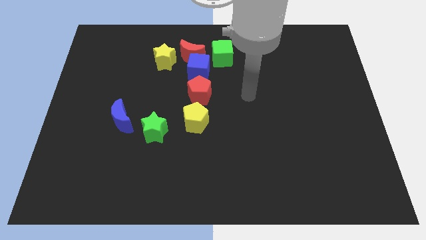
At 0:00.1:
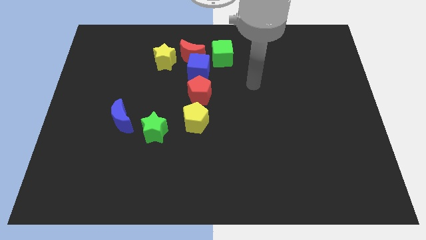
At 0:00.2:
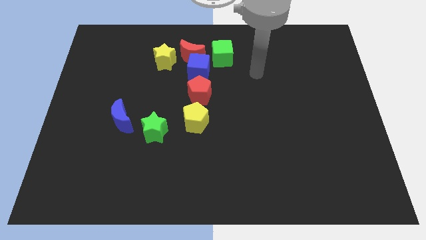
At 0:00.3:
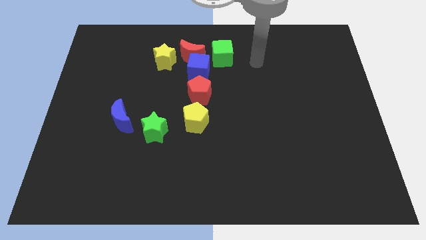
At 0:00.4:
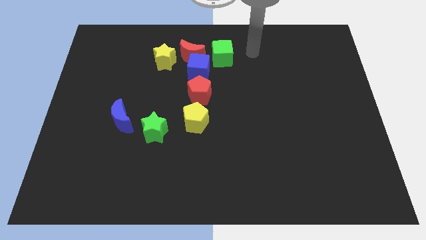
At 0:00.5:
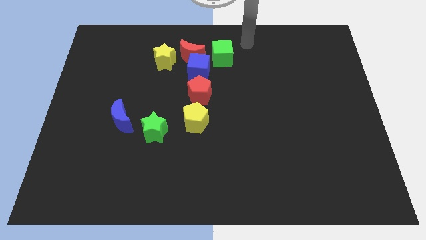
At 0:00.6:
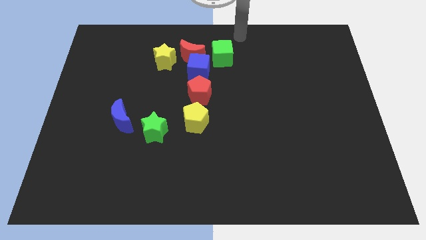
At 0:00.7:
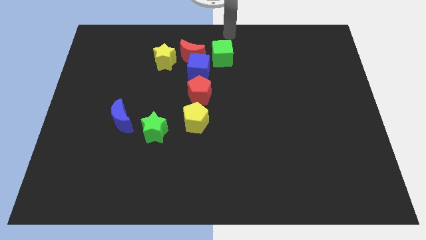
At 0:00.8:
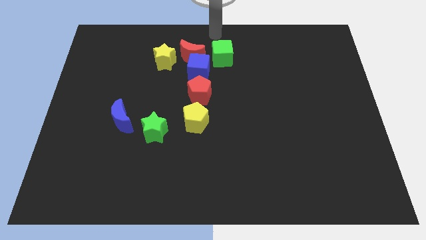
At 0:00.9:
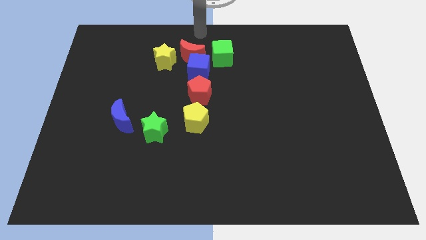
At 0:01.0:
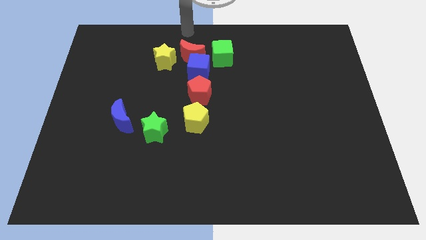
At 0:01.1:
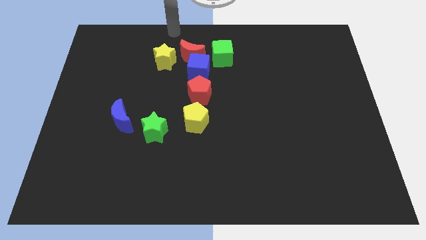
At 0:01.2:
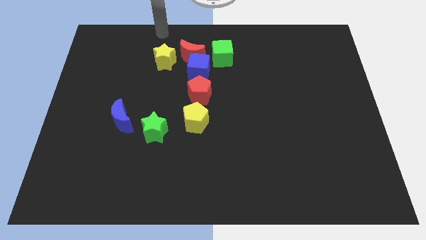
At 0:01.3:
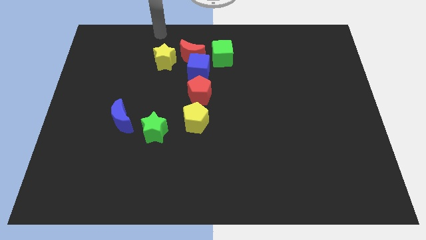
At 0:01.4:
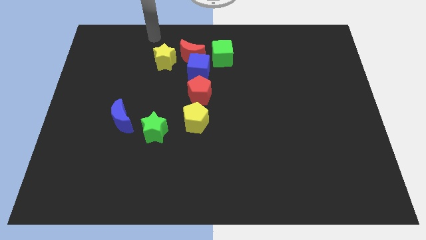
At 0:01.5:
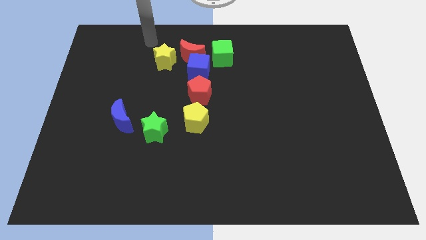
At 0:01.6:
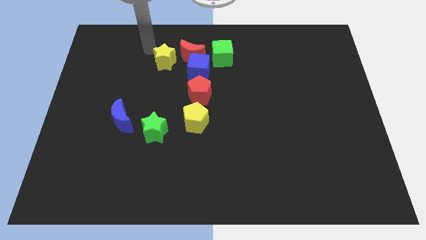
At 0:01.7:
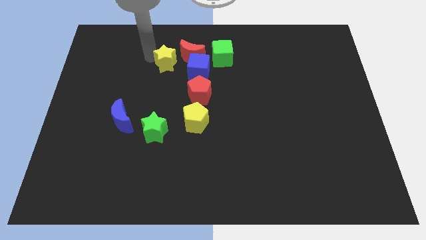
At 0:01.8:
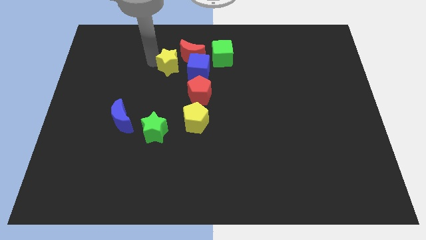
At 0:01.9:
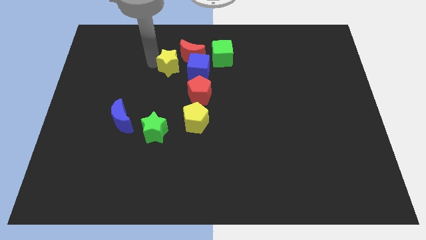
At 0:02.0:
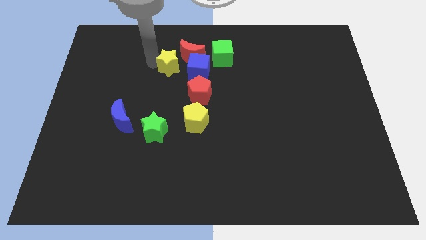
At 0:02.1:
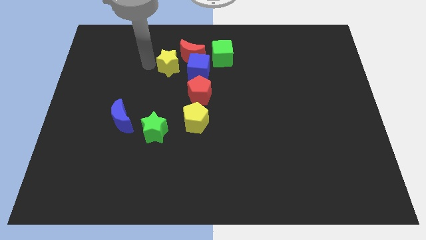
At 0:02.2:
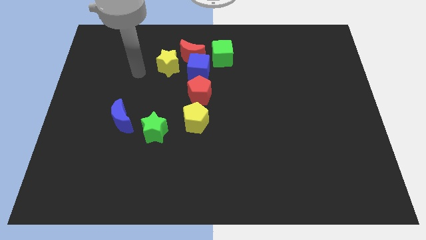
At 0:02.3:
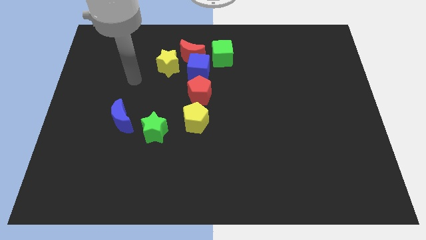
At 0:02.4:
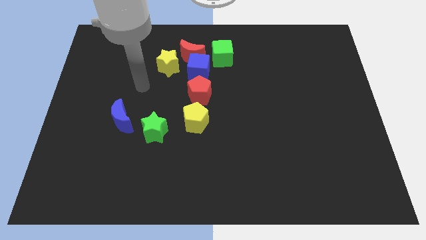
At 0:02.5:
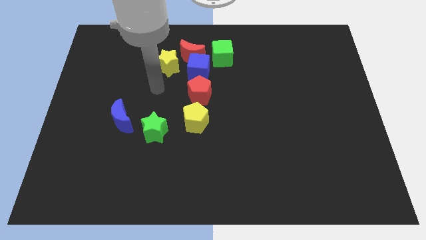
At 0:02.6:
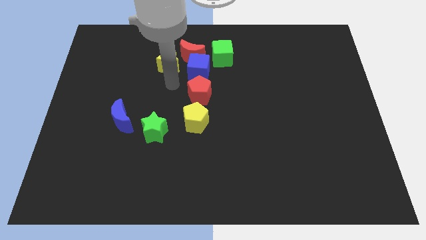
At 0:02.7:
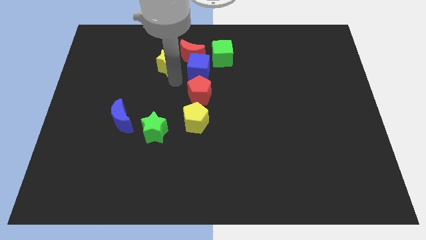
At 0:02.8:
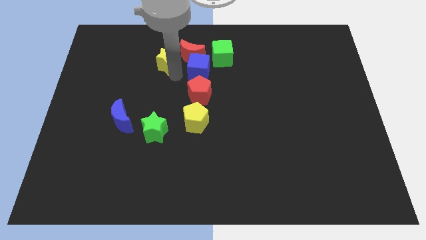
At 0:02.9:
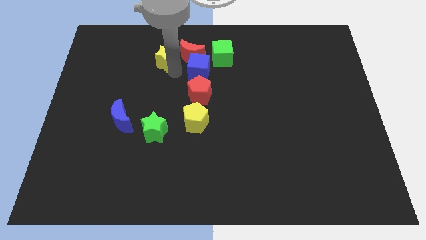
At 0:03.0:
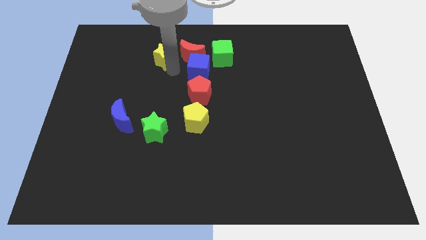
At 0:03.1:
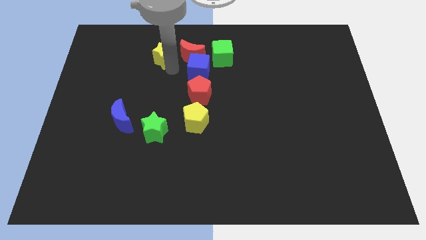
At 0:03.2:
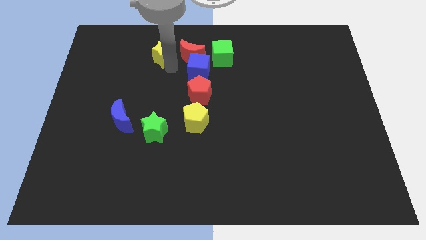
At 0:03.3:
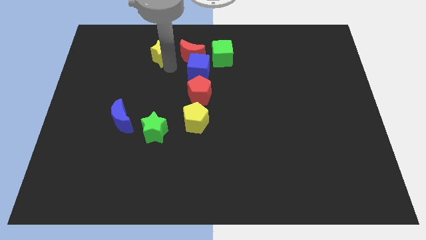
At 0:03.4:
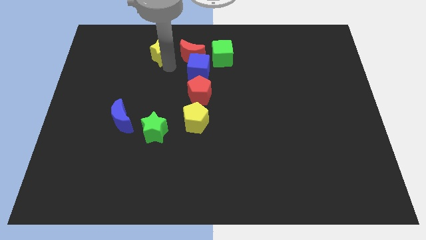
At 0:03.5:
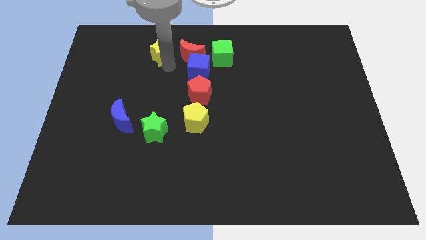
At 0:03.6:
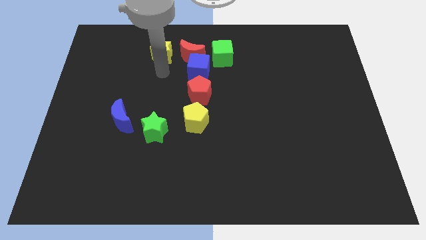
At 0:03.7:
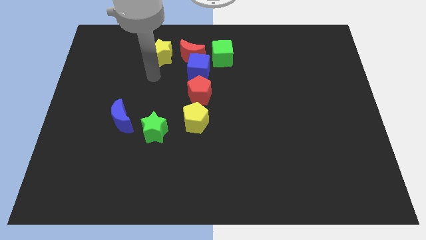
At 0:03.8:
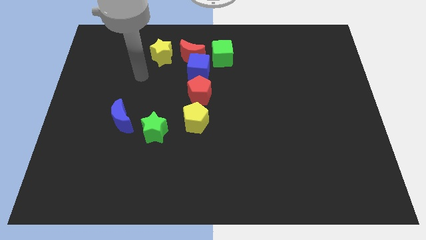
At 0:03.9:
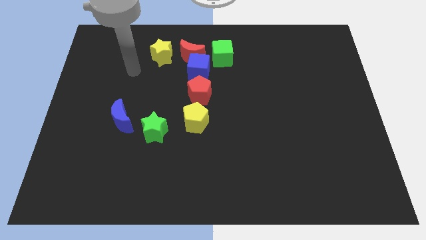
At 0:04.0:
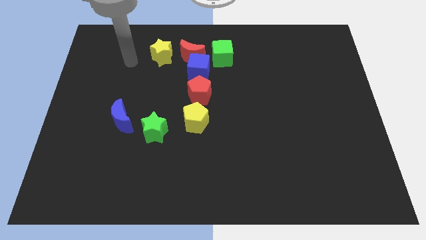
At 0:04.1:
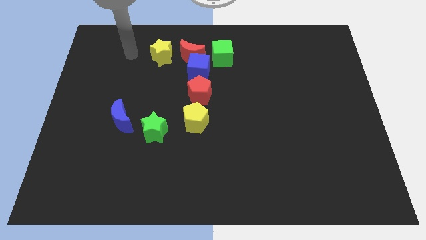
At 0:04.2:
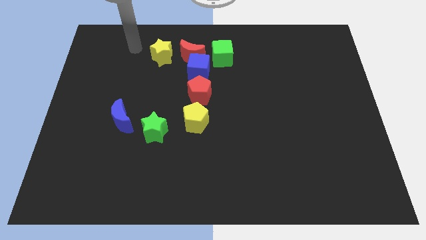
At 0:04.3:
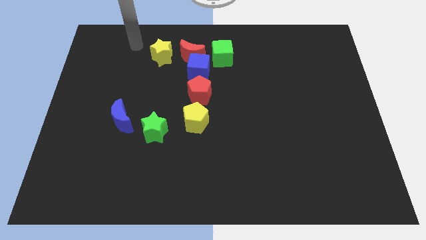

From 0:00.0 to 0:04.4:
slide the yellow star to the left side of the red moon

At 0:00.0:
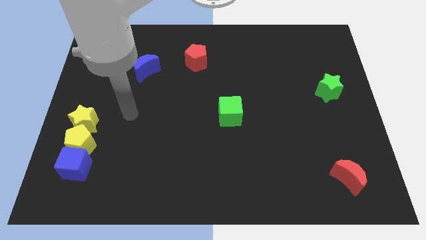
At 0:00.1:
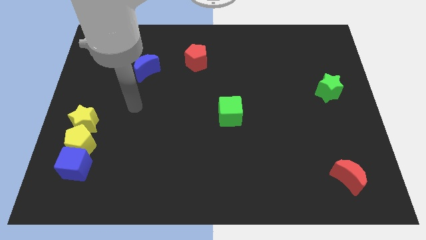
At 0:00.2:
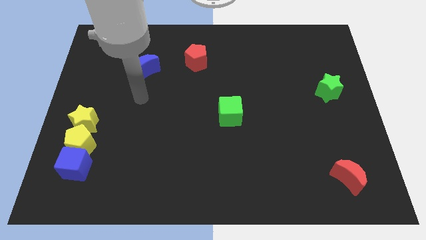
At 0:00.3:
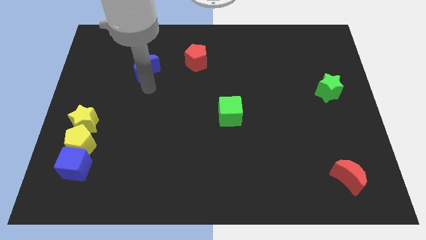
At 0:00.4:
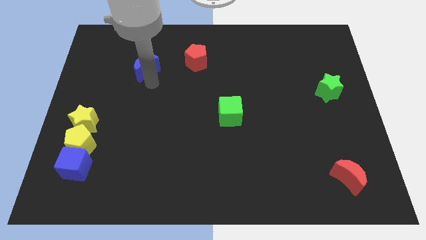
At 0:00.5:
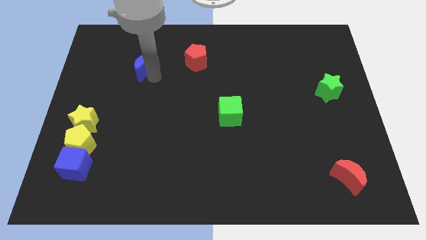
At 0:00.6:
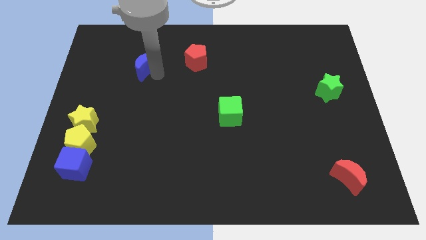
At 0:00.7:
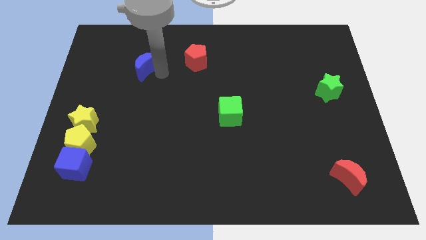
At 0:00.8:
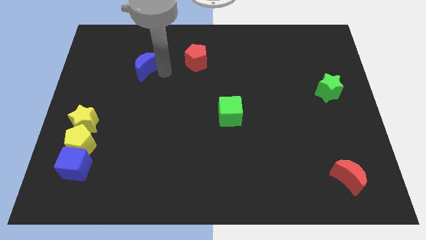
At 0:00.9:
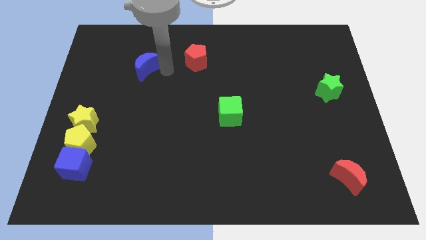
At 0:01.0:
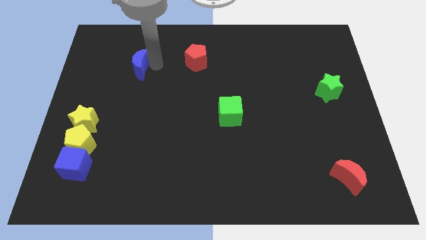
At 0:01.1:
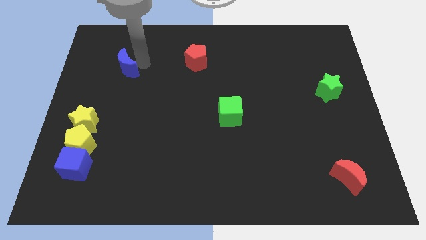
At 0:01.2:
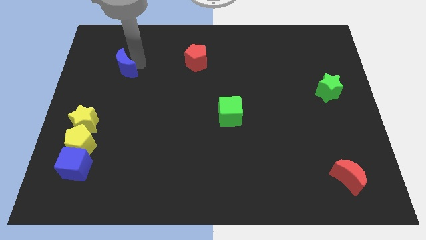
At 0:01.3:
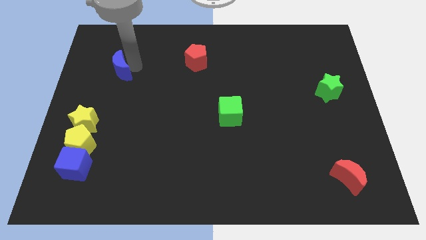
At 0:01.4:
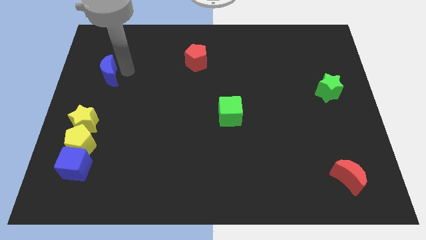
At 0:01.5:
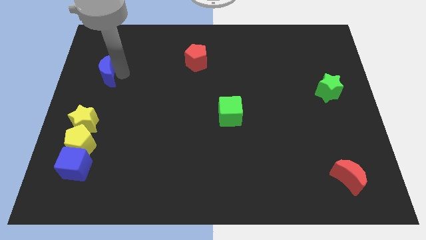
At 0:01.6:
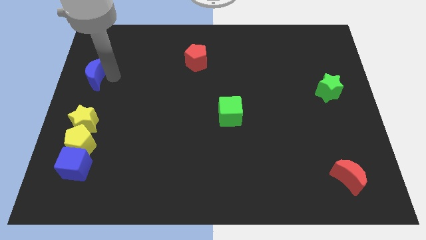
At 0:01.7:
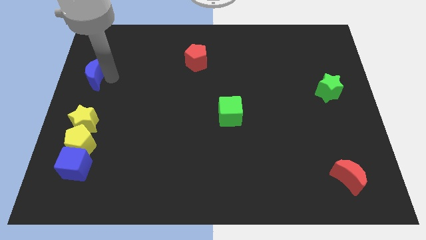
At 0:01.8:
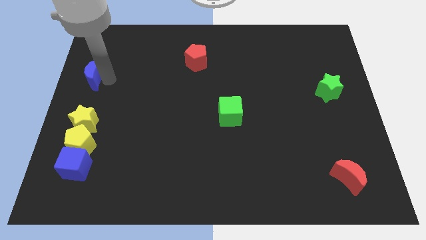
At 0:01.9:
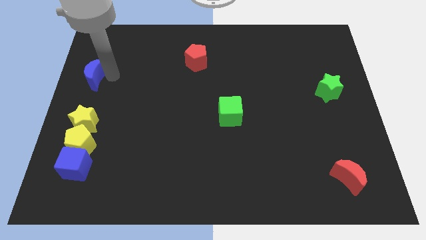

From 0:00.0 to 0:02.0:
push the blue moon on top of yellow star

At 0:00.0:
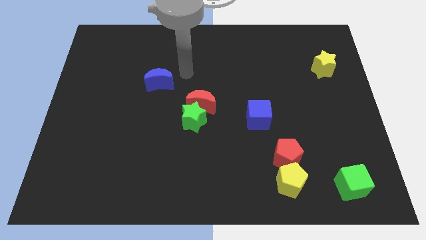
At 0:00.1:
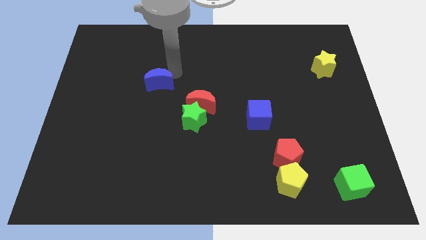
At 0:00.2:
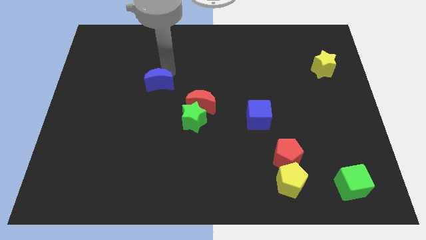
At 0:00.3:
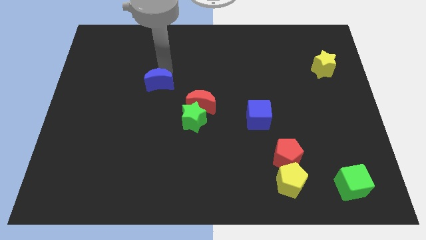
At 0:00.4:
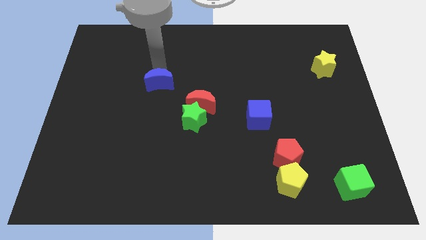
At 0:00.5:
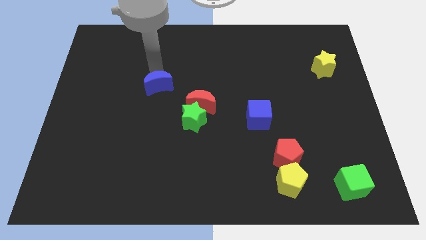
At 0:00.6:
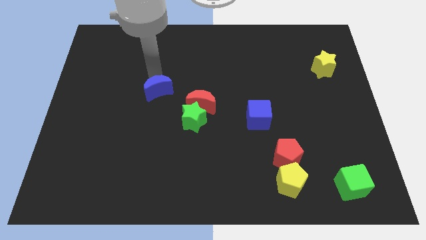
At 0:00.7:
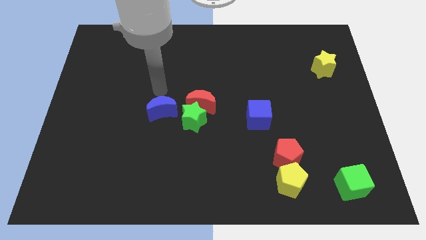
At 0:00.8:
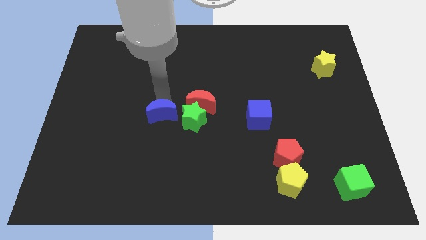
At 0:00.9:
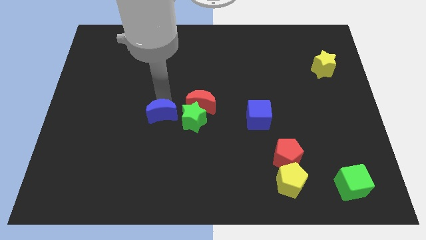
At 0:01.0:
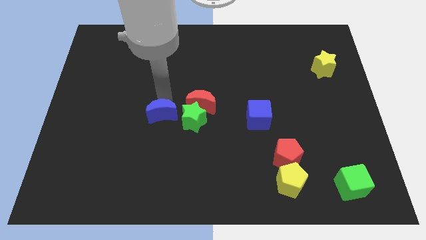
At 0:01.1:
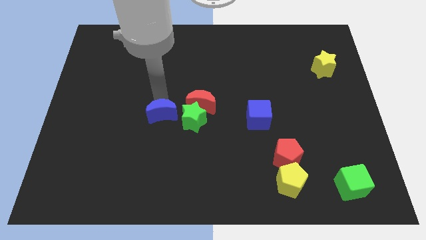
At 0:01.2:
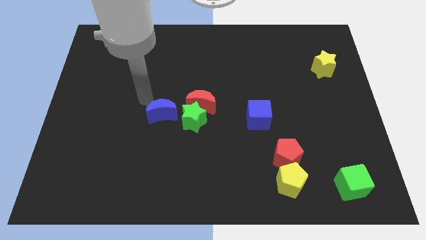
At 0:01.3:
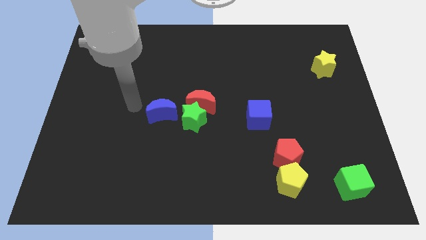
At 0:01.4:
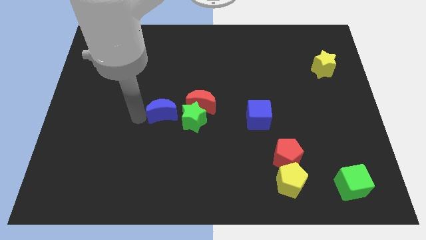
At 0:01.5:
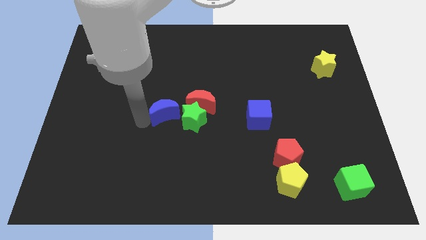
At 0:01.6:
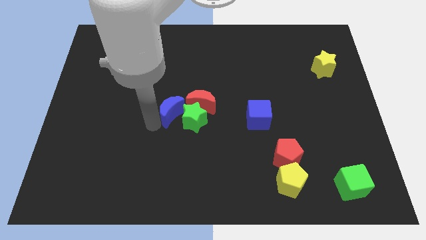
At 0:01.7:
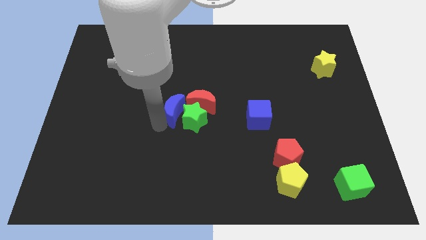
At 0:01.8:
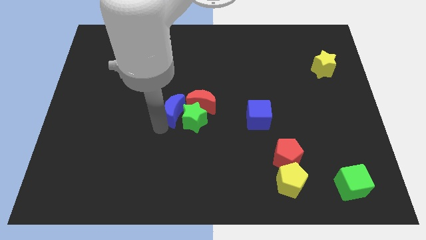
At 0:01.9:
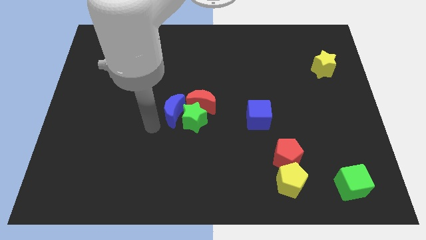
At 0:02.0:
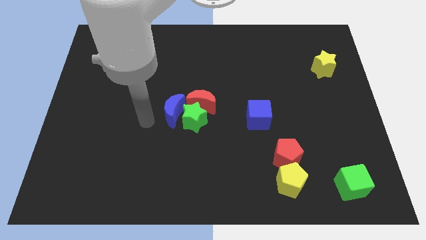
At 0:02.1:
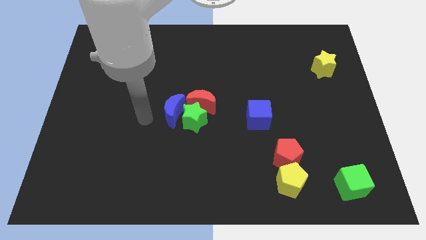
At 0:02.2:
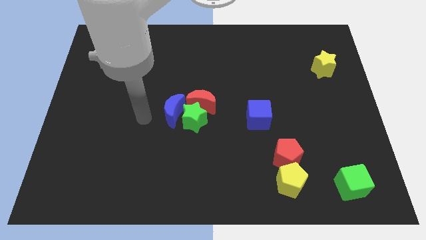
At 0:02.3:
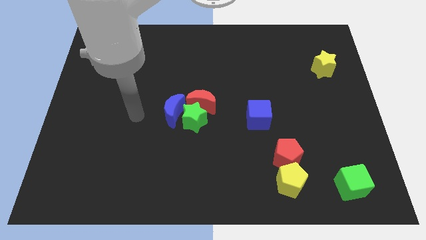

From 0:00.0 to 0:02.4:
place the blue moon to the left of green star at the center

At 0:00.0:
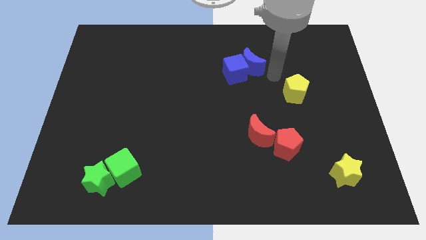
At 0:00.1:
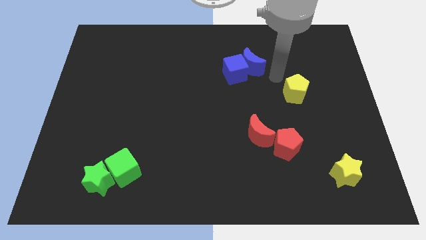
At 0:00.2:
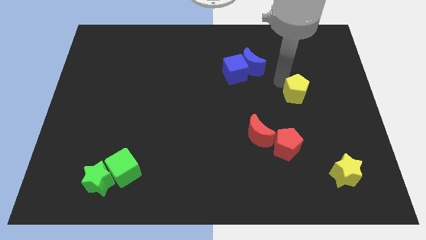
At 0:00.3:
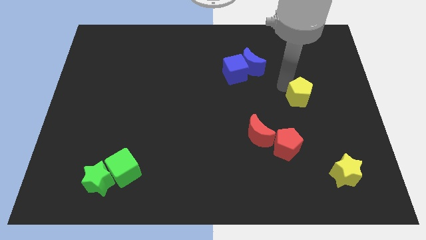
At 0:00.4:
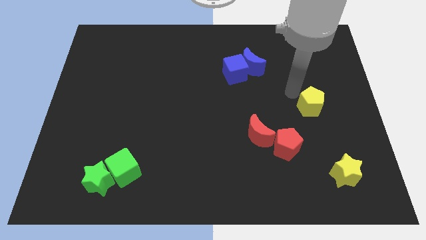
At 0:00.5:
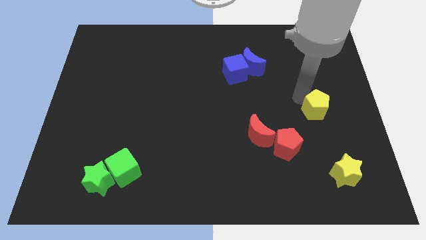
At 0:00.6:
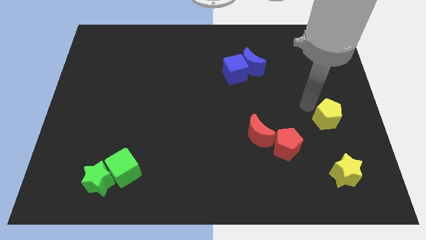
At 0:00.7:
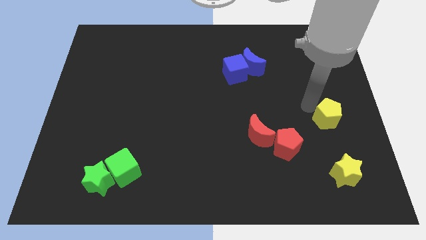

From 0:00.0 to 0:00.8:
move the yellow pentagon towards the yellow star
